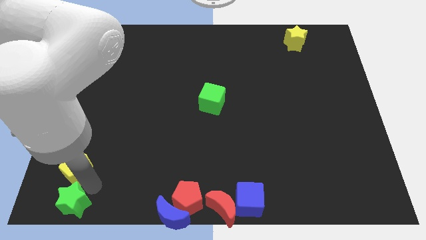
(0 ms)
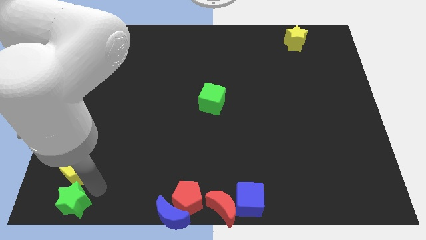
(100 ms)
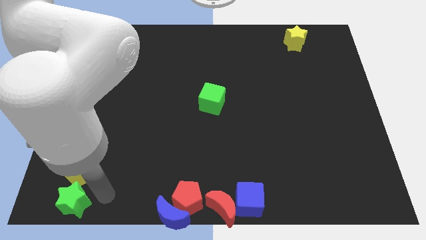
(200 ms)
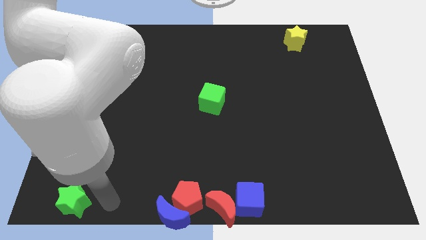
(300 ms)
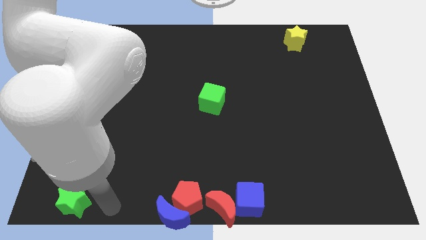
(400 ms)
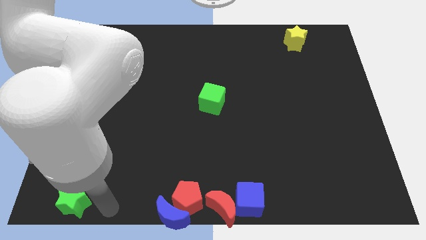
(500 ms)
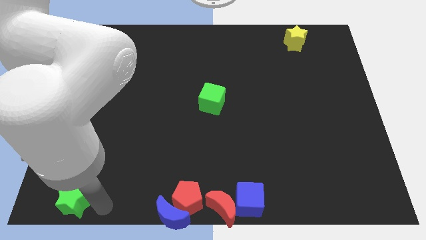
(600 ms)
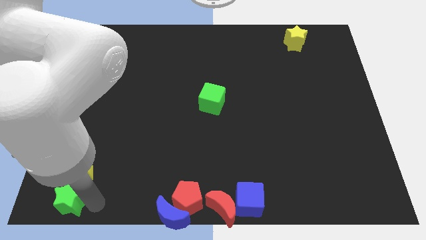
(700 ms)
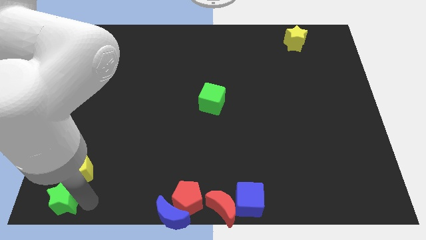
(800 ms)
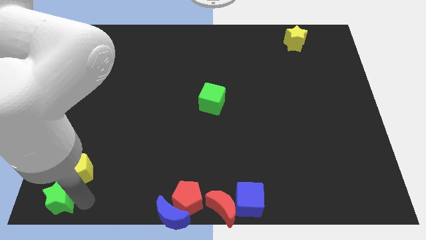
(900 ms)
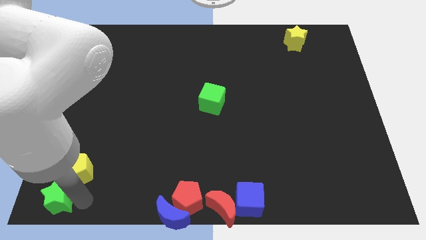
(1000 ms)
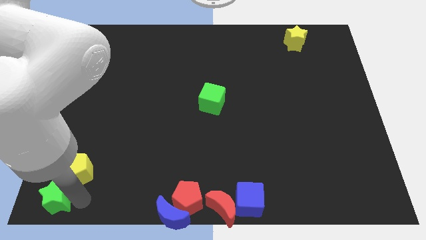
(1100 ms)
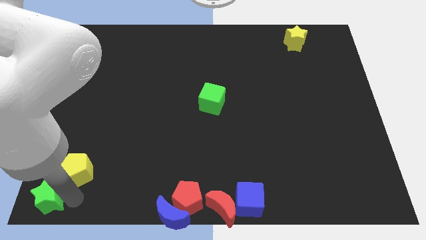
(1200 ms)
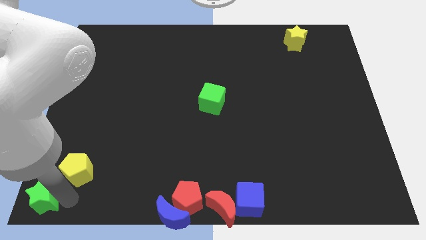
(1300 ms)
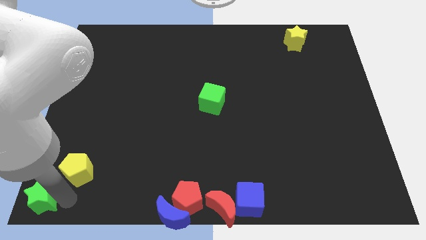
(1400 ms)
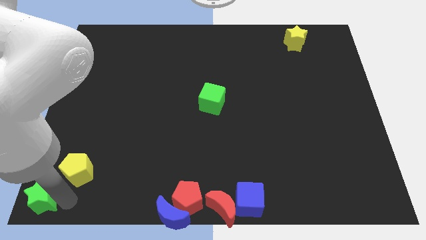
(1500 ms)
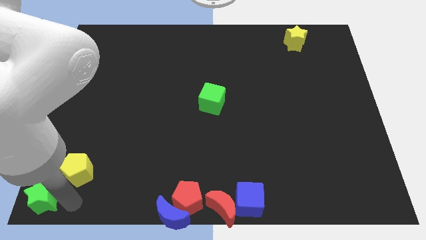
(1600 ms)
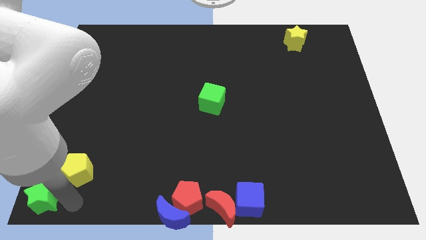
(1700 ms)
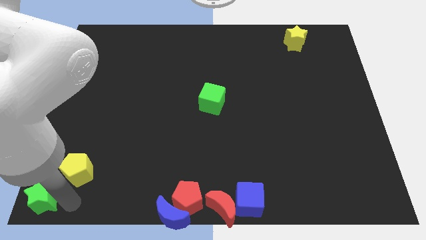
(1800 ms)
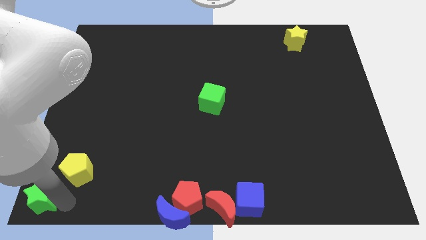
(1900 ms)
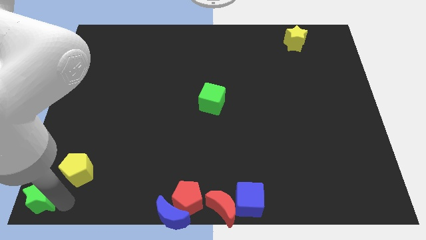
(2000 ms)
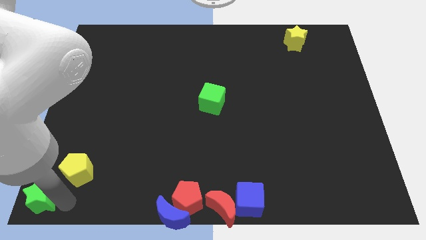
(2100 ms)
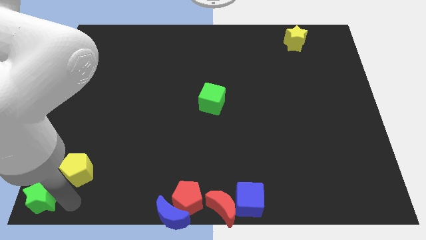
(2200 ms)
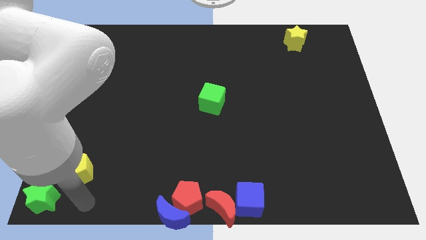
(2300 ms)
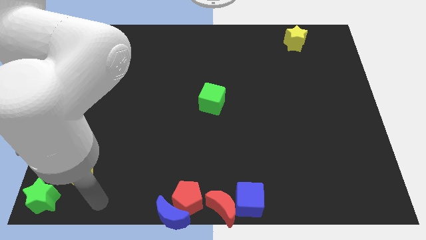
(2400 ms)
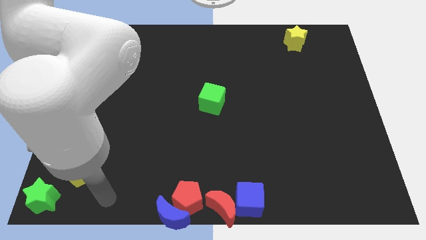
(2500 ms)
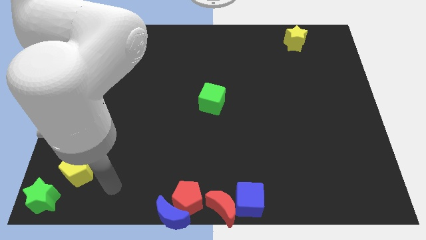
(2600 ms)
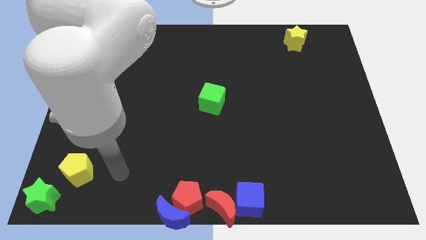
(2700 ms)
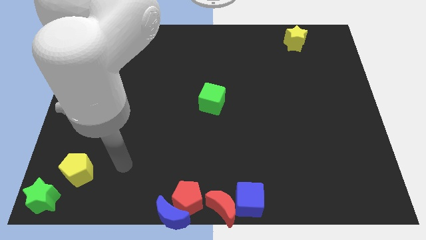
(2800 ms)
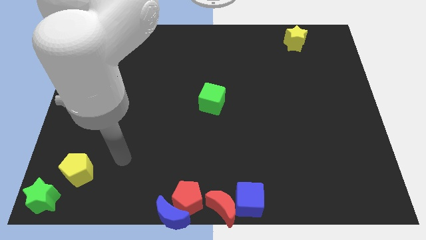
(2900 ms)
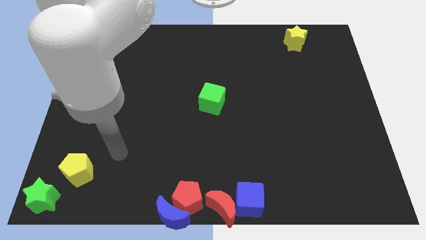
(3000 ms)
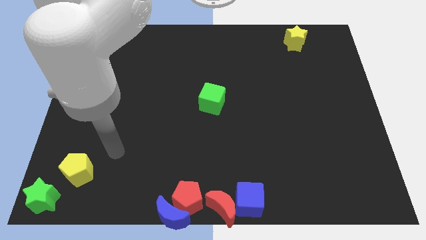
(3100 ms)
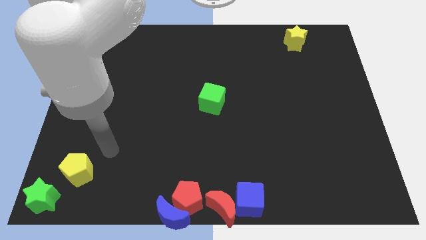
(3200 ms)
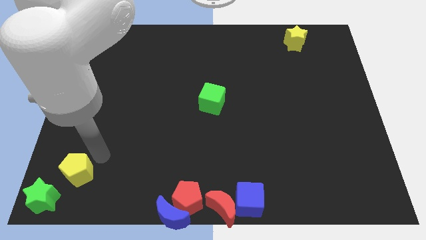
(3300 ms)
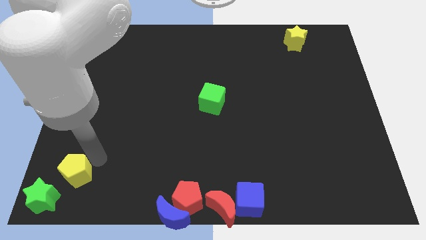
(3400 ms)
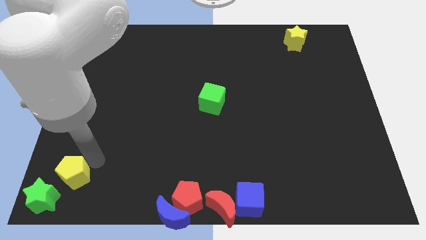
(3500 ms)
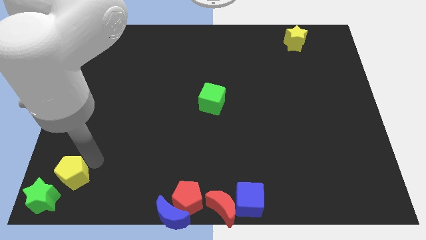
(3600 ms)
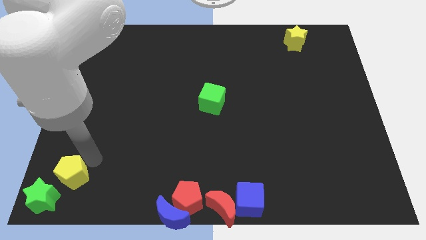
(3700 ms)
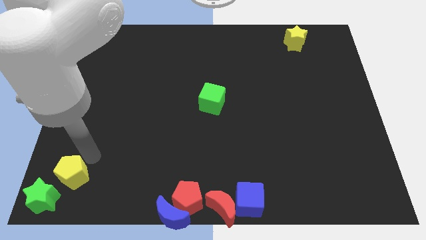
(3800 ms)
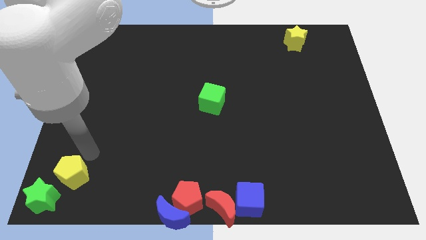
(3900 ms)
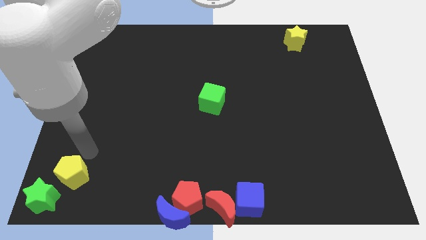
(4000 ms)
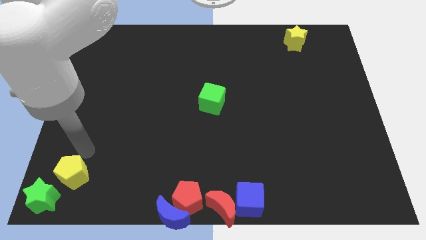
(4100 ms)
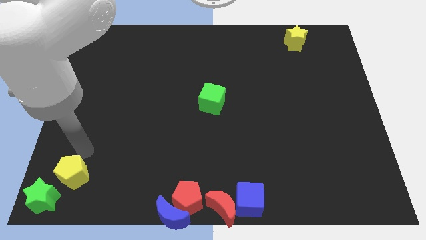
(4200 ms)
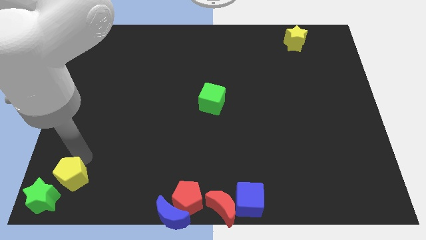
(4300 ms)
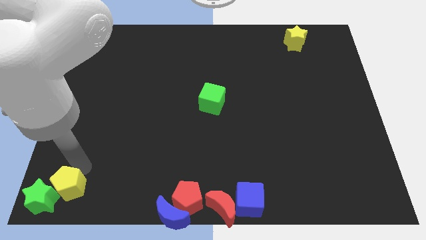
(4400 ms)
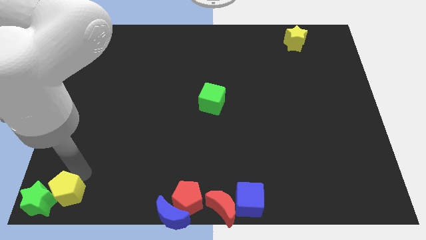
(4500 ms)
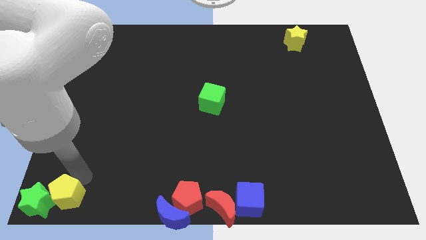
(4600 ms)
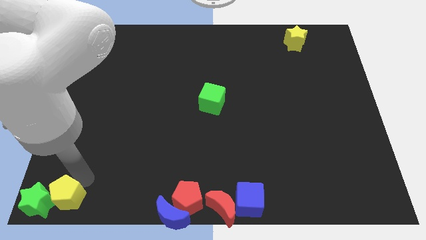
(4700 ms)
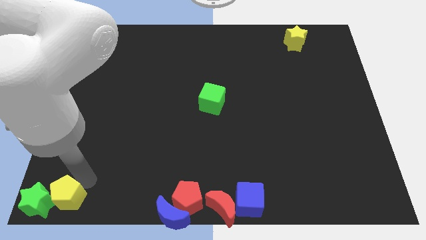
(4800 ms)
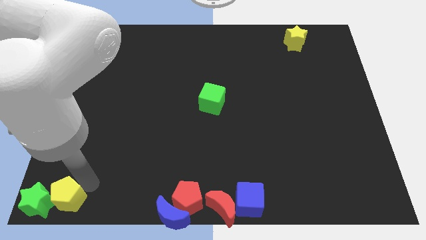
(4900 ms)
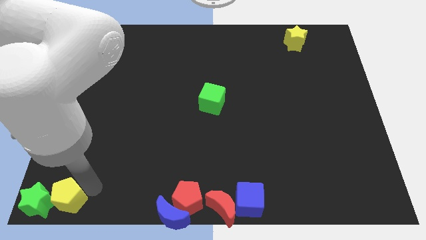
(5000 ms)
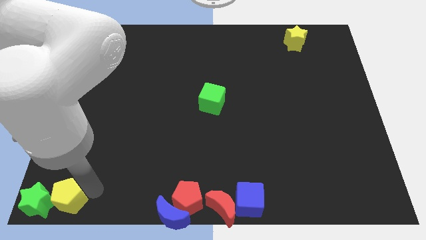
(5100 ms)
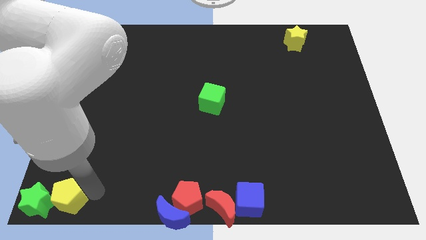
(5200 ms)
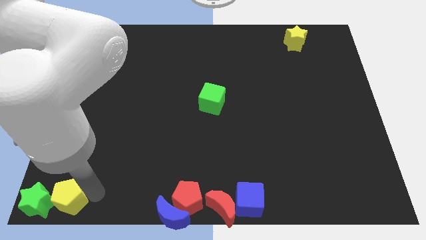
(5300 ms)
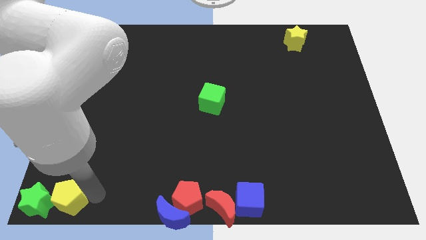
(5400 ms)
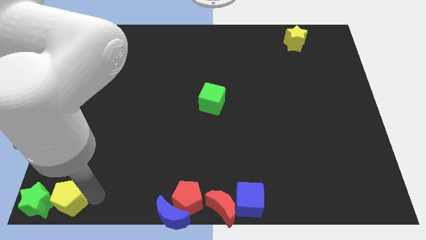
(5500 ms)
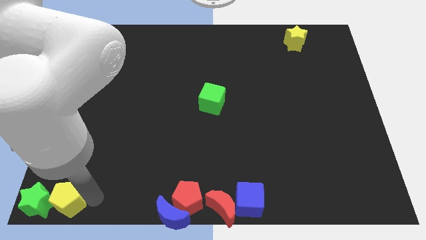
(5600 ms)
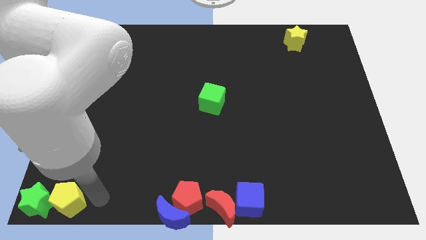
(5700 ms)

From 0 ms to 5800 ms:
slide the green star and yellow pentagon to the bottom left of the table

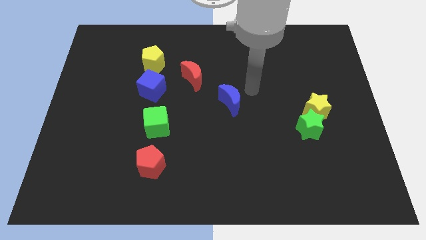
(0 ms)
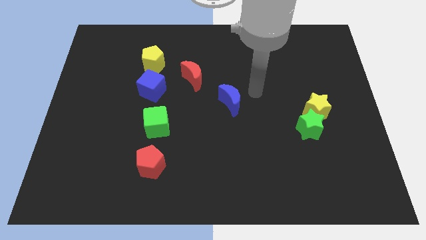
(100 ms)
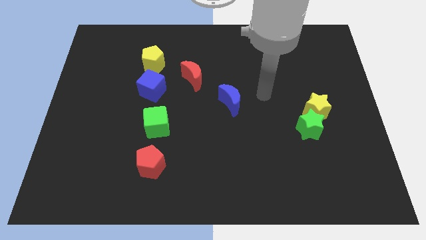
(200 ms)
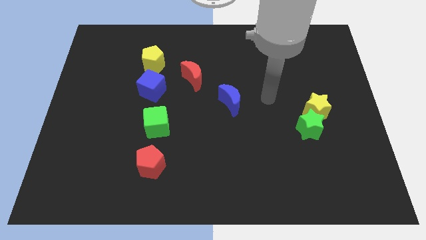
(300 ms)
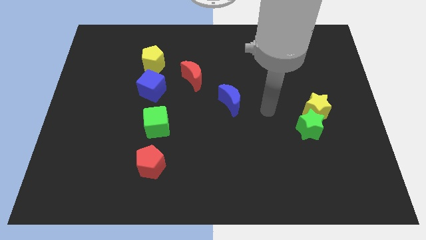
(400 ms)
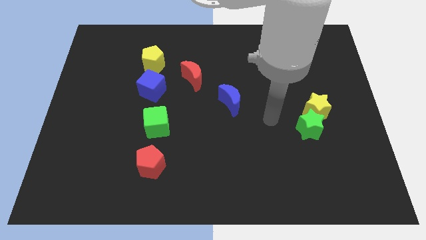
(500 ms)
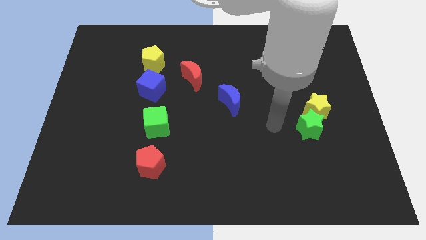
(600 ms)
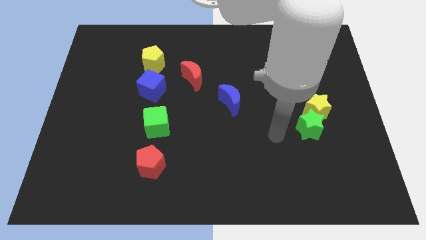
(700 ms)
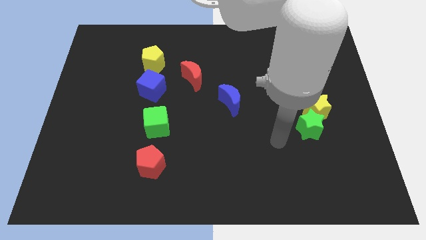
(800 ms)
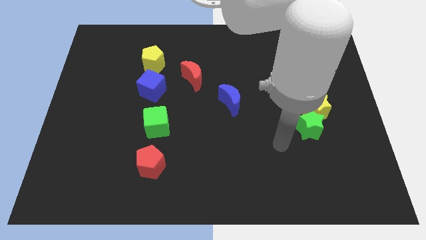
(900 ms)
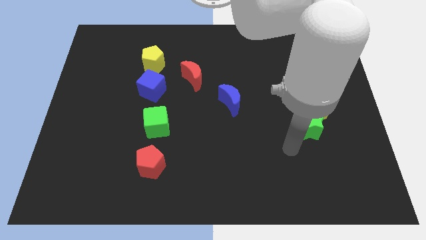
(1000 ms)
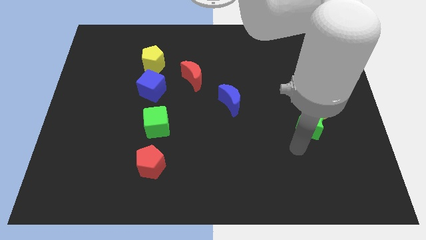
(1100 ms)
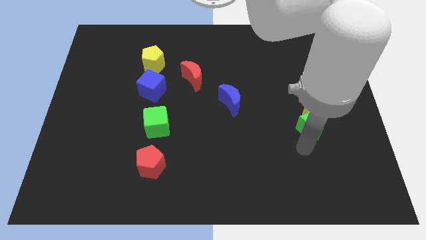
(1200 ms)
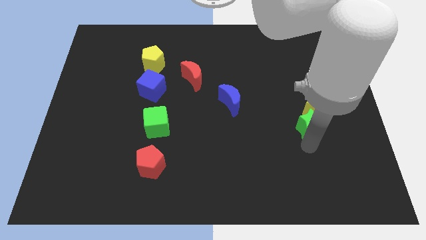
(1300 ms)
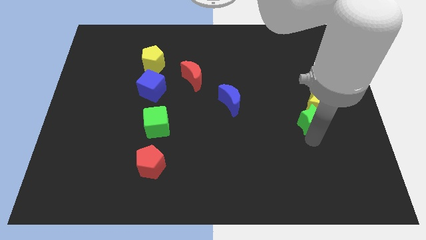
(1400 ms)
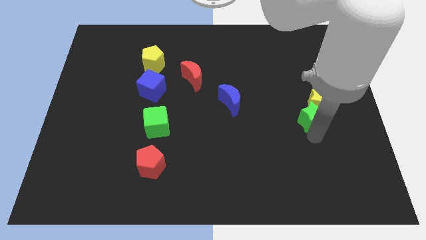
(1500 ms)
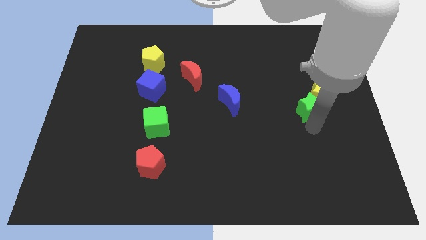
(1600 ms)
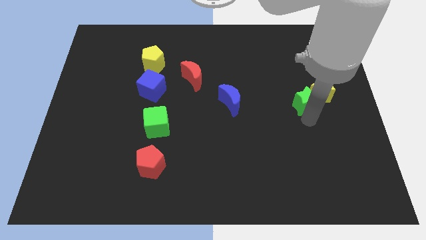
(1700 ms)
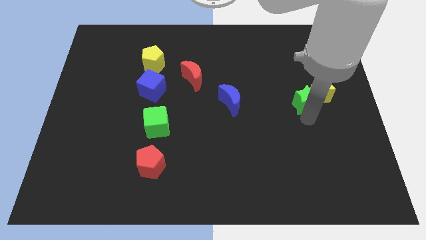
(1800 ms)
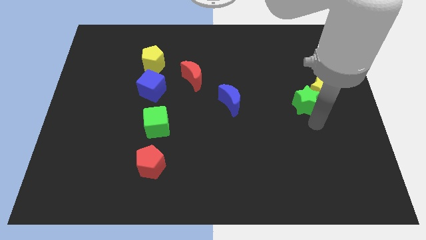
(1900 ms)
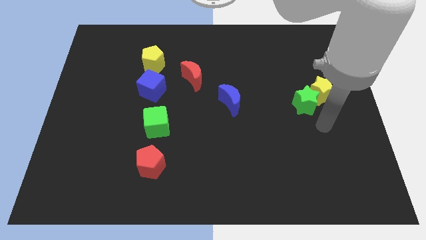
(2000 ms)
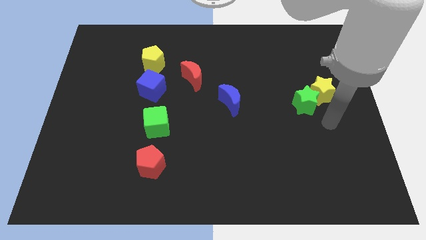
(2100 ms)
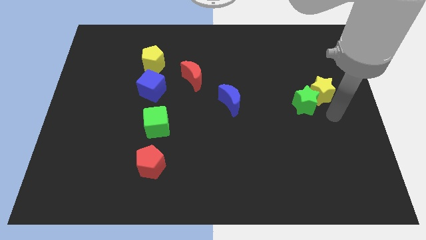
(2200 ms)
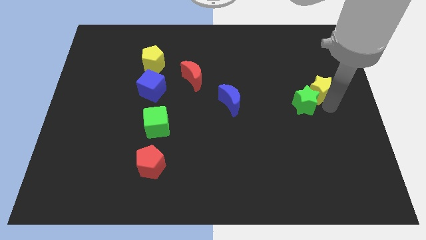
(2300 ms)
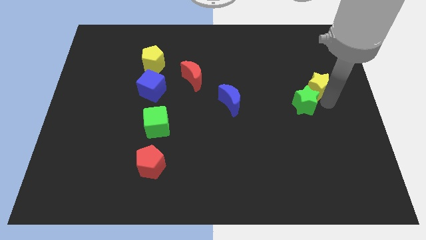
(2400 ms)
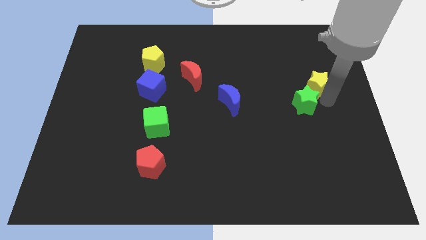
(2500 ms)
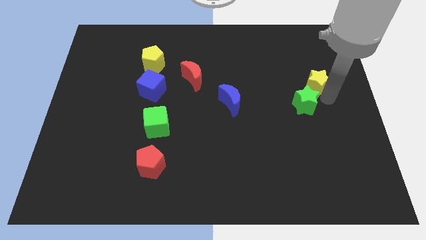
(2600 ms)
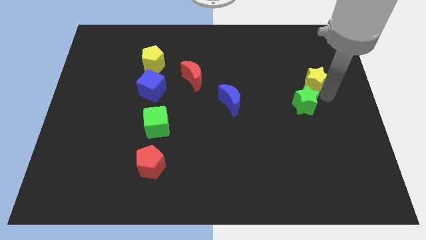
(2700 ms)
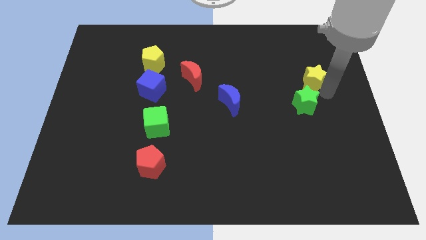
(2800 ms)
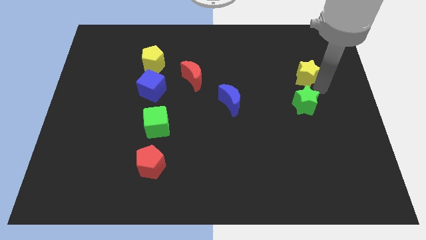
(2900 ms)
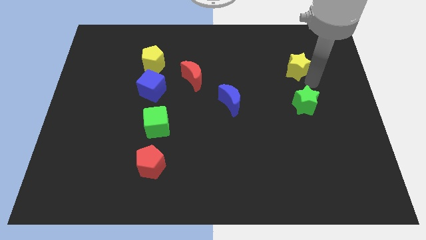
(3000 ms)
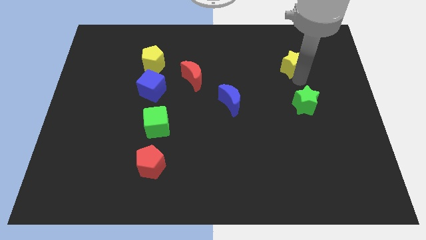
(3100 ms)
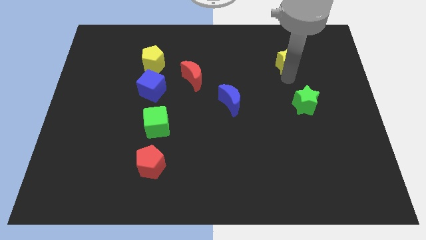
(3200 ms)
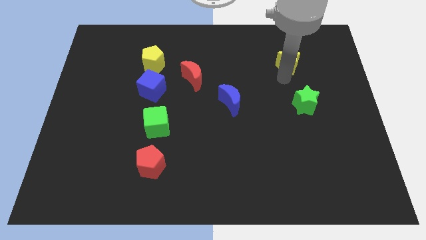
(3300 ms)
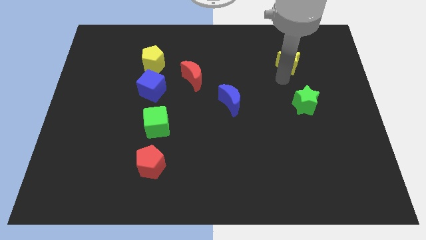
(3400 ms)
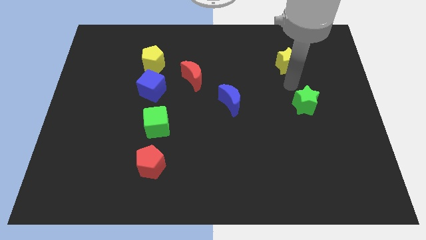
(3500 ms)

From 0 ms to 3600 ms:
separate green star and the yellow star
